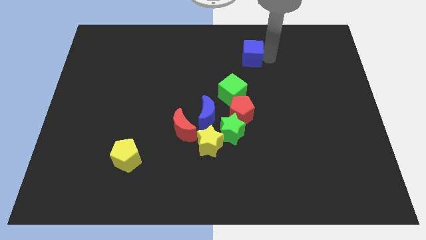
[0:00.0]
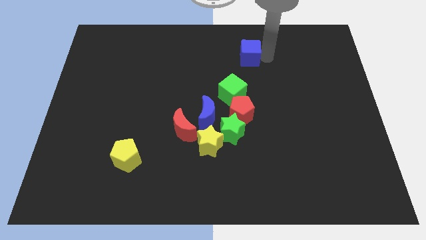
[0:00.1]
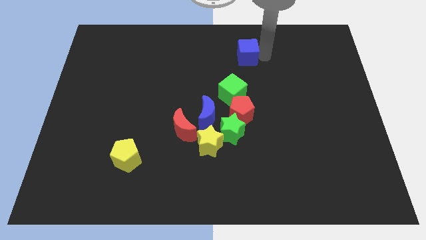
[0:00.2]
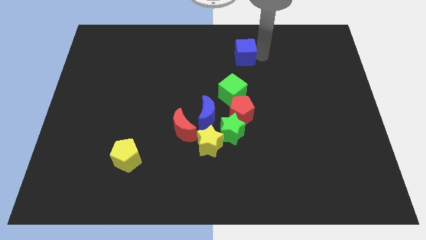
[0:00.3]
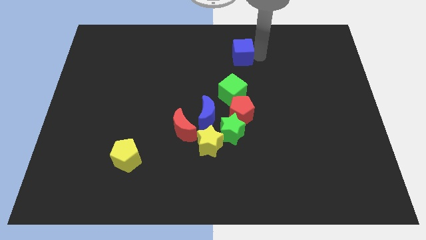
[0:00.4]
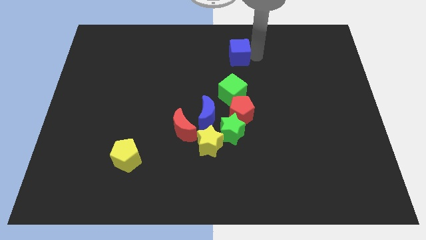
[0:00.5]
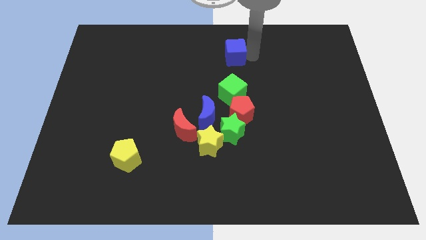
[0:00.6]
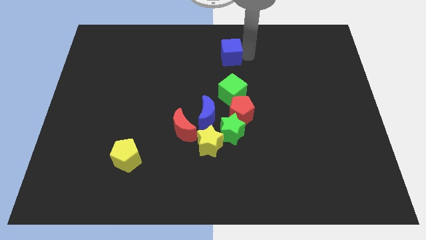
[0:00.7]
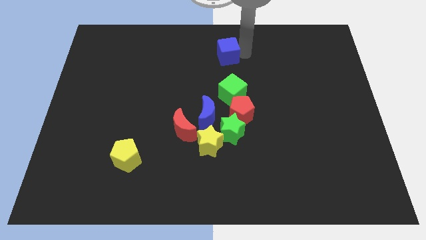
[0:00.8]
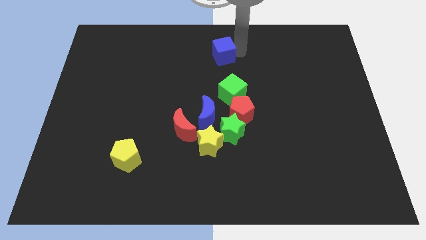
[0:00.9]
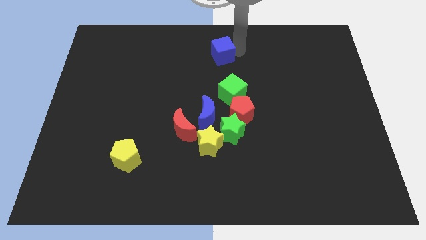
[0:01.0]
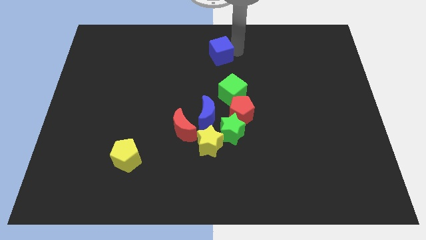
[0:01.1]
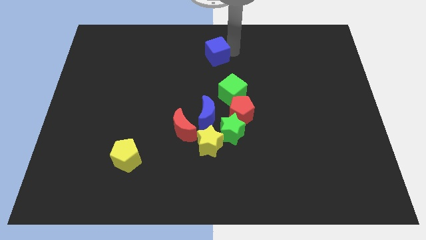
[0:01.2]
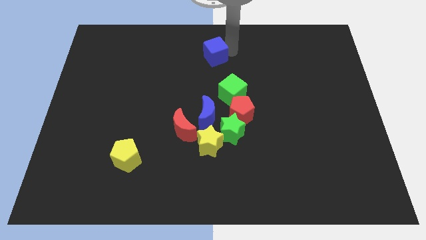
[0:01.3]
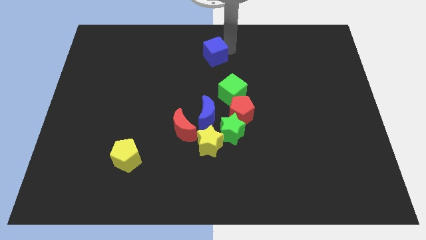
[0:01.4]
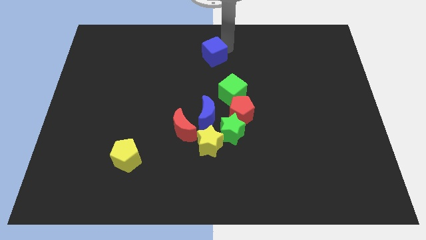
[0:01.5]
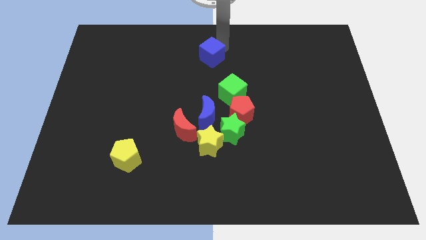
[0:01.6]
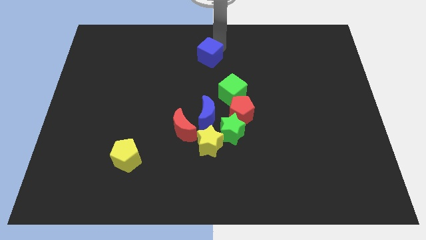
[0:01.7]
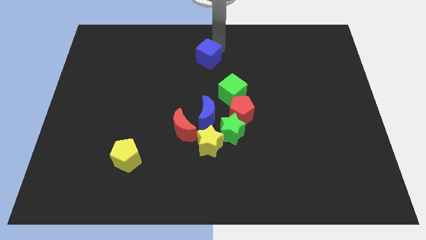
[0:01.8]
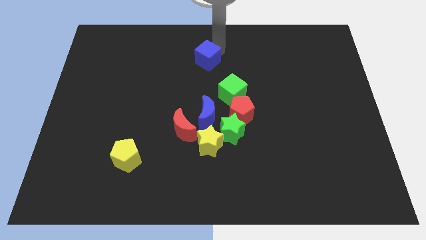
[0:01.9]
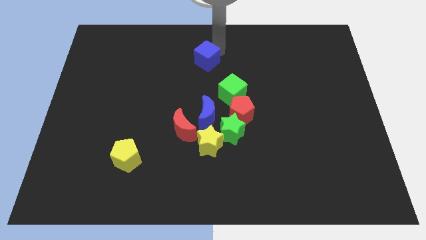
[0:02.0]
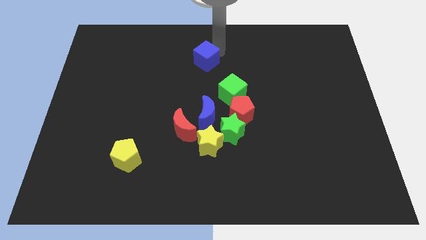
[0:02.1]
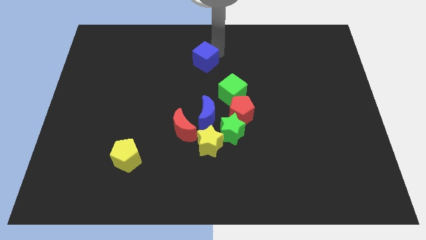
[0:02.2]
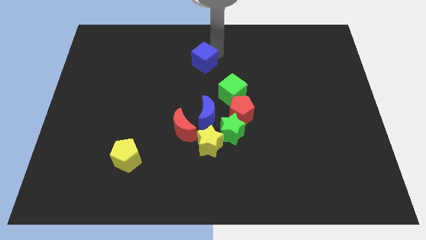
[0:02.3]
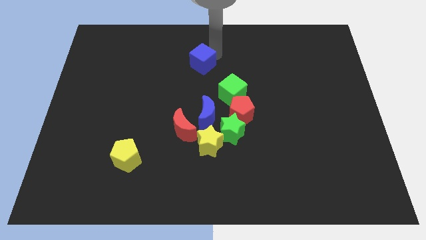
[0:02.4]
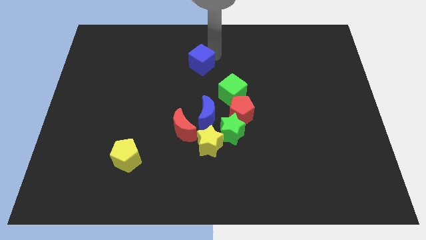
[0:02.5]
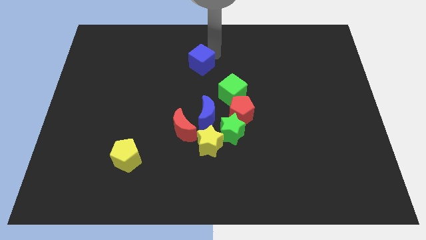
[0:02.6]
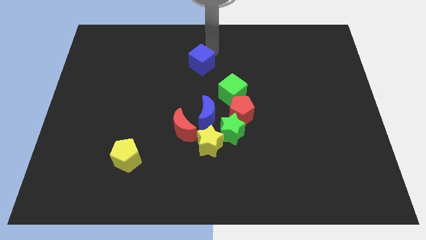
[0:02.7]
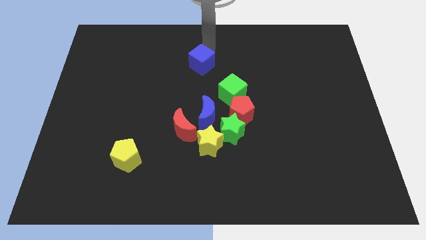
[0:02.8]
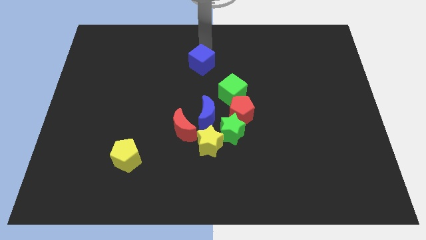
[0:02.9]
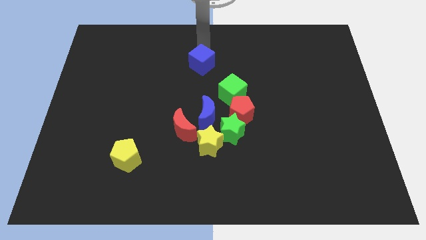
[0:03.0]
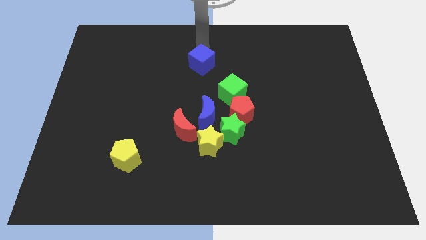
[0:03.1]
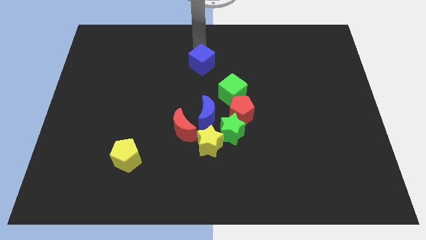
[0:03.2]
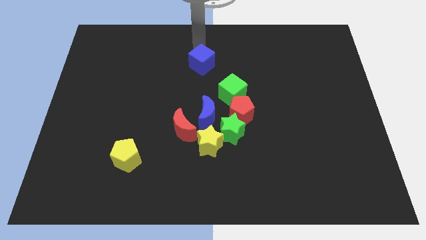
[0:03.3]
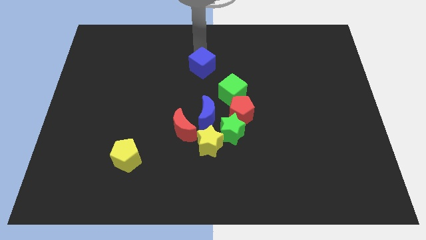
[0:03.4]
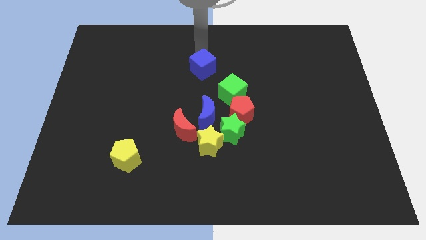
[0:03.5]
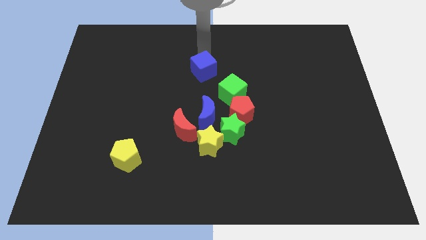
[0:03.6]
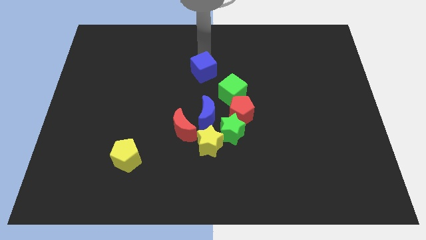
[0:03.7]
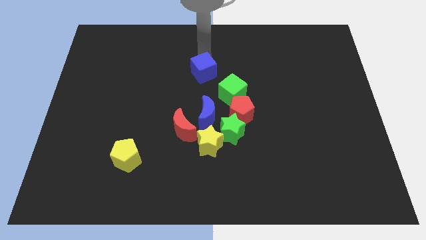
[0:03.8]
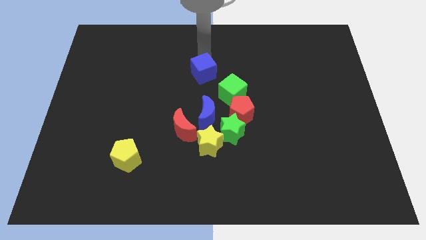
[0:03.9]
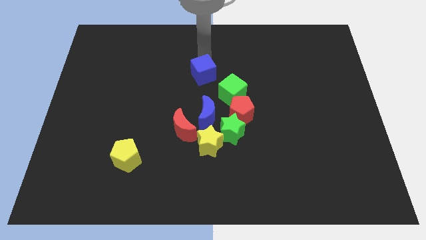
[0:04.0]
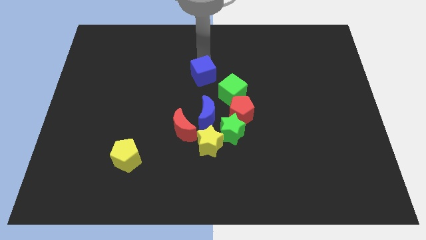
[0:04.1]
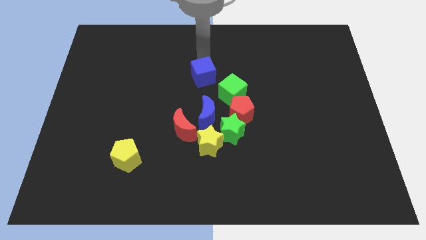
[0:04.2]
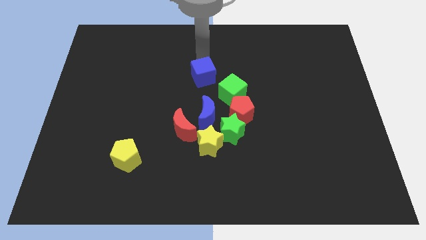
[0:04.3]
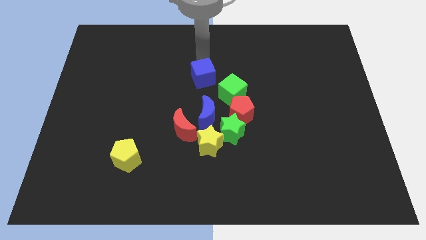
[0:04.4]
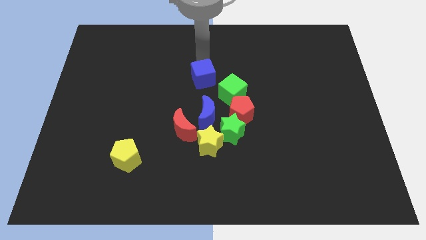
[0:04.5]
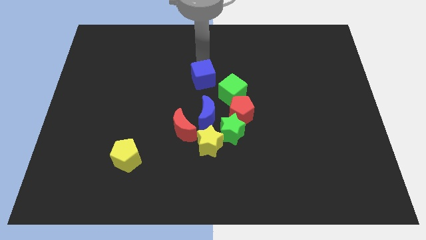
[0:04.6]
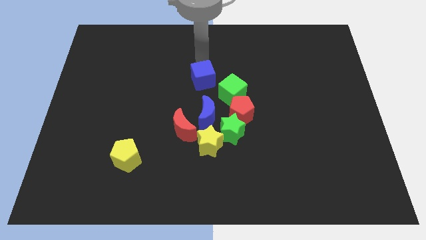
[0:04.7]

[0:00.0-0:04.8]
move the blue cube to the top side of the blue crescent

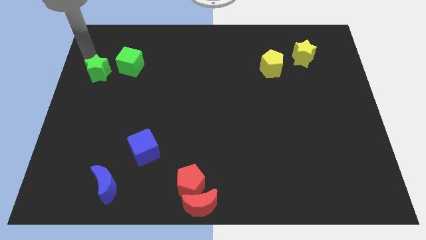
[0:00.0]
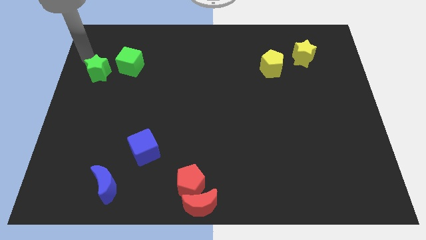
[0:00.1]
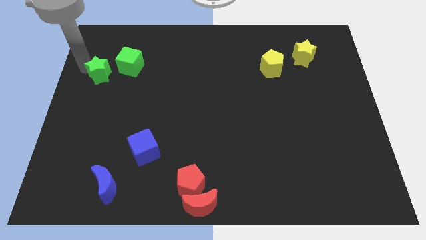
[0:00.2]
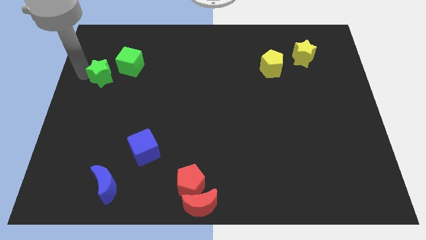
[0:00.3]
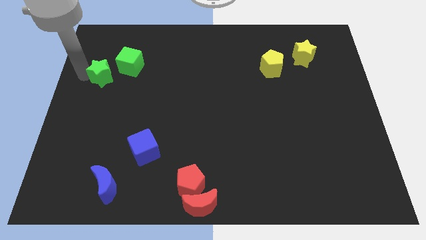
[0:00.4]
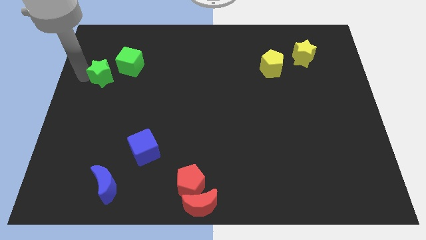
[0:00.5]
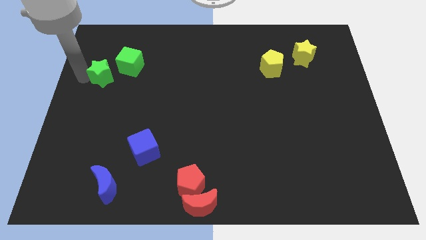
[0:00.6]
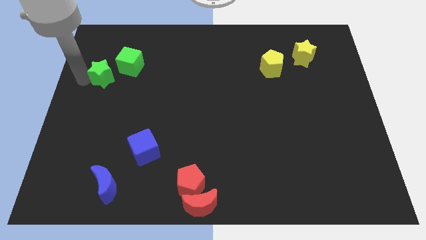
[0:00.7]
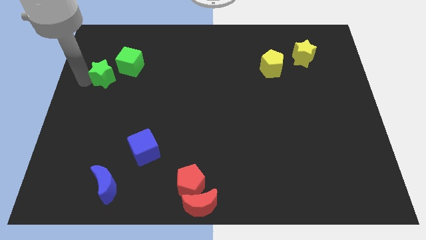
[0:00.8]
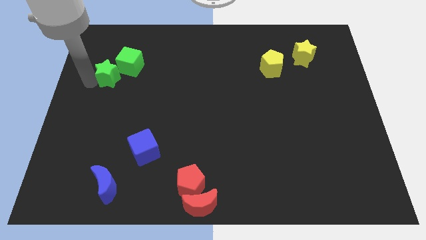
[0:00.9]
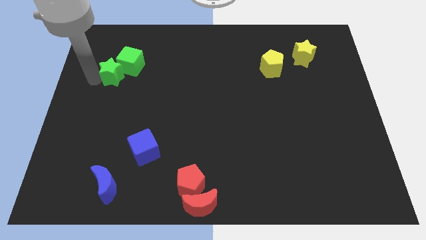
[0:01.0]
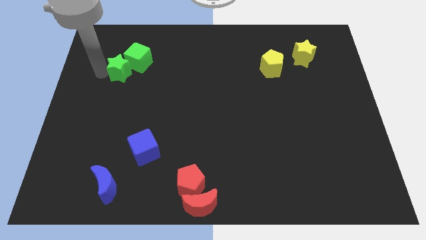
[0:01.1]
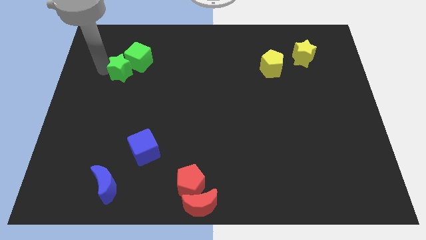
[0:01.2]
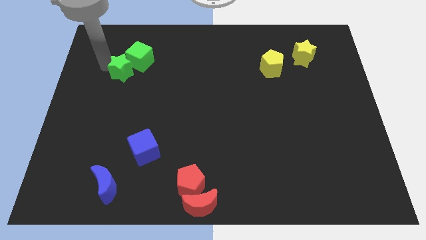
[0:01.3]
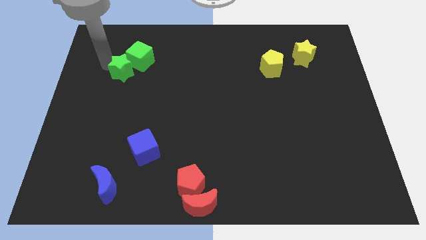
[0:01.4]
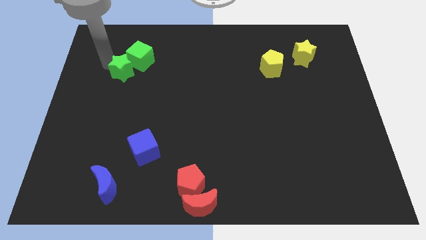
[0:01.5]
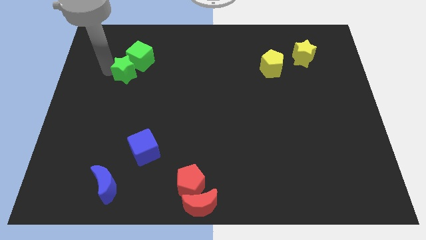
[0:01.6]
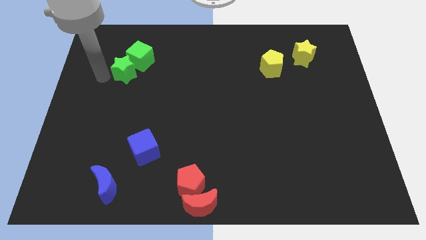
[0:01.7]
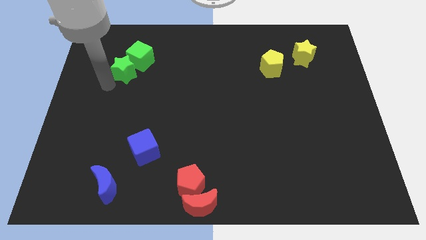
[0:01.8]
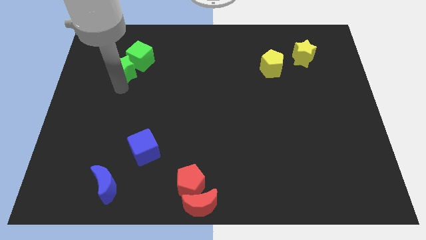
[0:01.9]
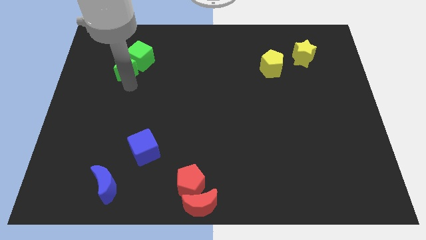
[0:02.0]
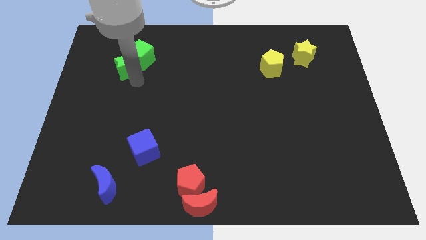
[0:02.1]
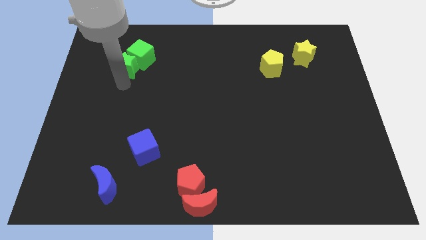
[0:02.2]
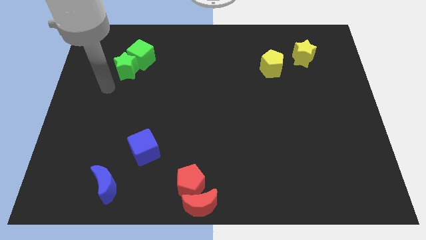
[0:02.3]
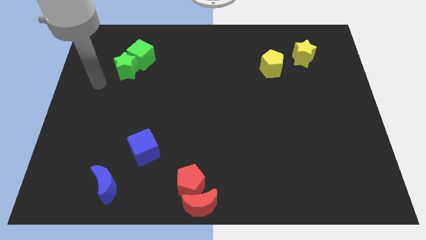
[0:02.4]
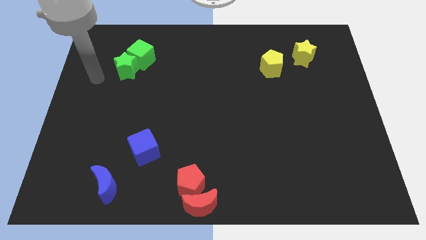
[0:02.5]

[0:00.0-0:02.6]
slightly push the green star into the green cube

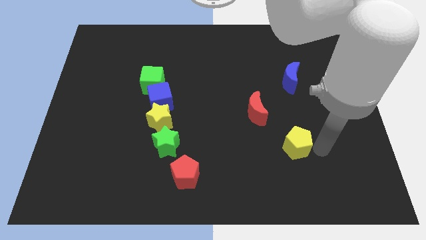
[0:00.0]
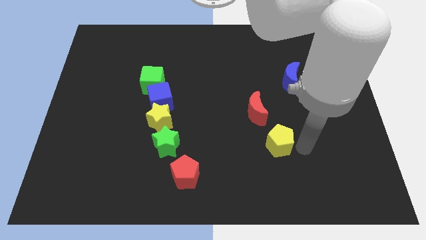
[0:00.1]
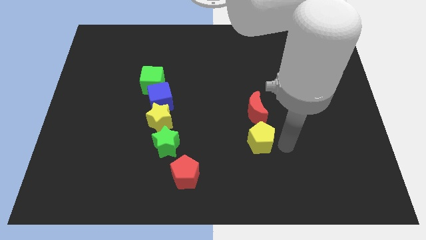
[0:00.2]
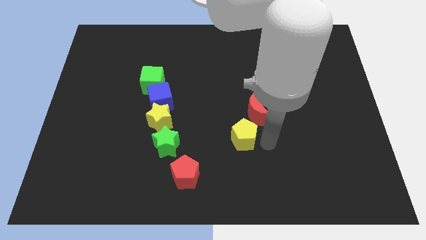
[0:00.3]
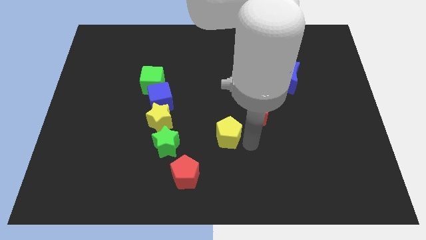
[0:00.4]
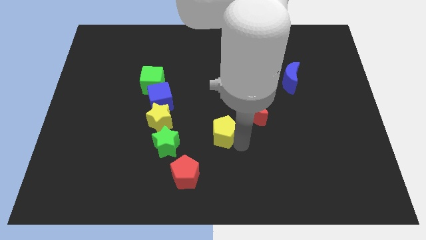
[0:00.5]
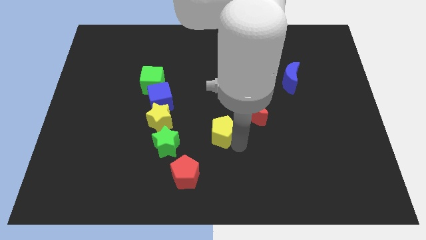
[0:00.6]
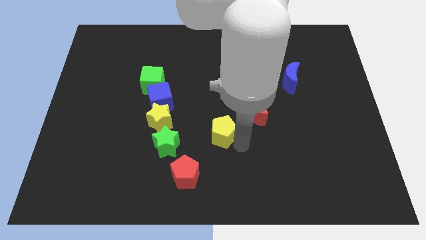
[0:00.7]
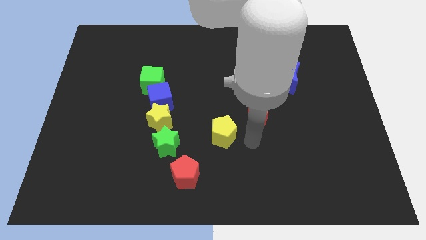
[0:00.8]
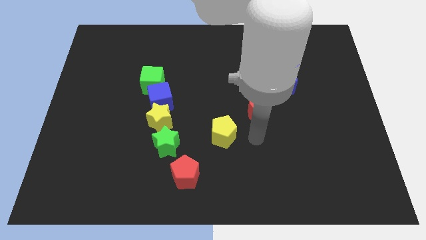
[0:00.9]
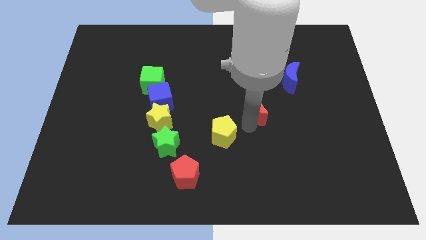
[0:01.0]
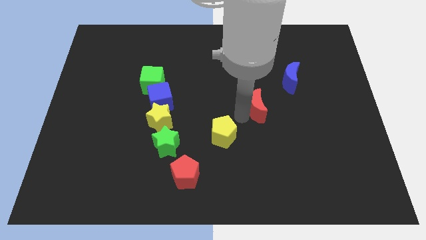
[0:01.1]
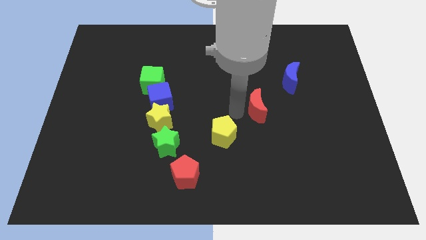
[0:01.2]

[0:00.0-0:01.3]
place the yellow pentagon in between the red moon and red pentagon

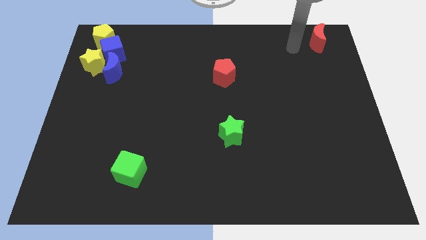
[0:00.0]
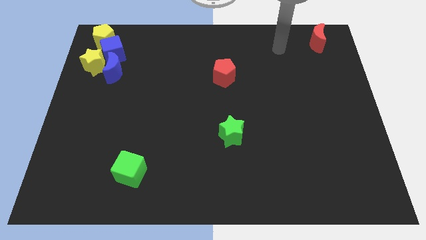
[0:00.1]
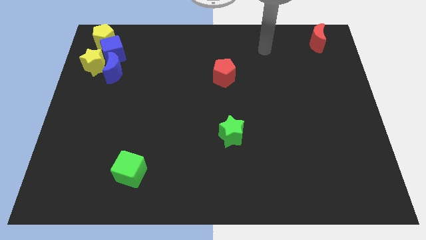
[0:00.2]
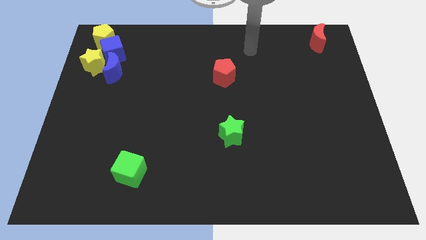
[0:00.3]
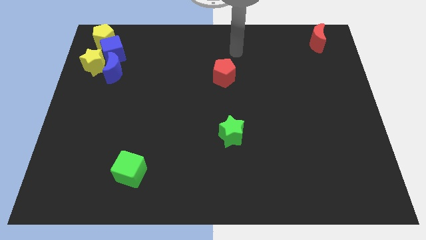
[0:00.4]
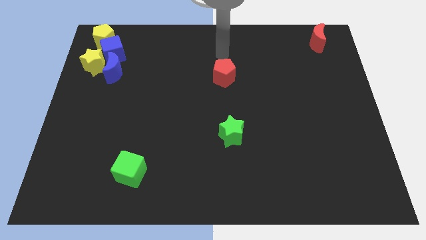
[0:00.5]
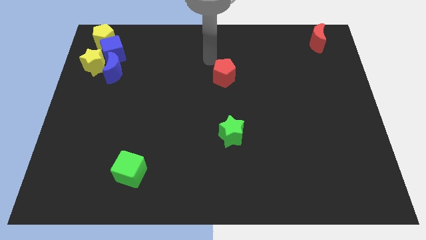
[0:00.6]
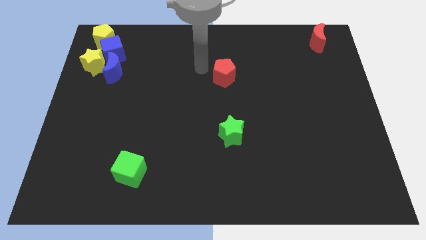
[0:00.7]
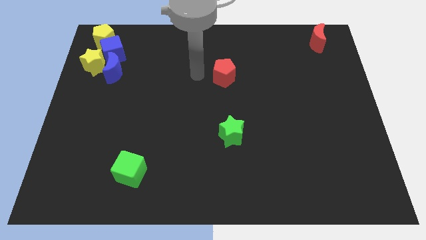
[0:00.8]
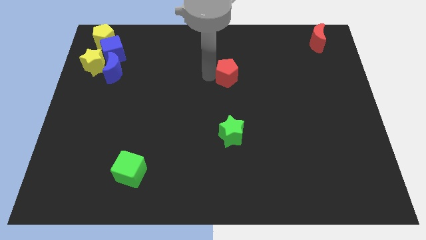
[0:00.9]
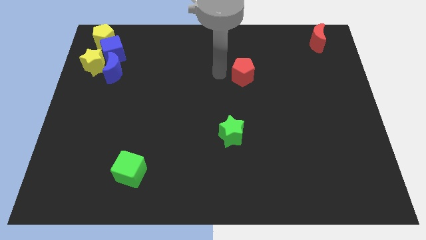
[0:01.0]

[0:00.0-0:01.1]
place the arm left to the red pentagon
